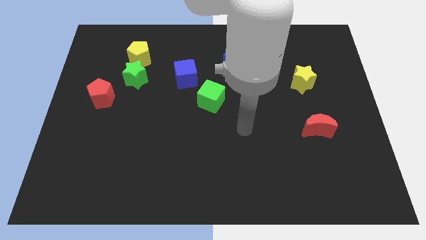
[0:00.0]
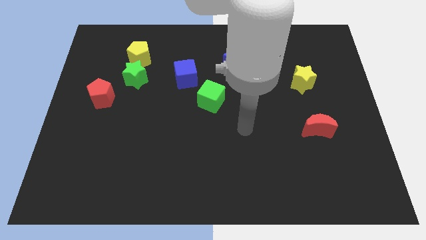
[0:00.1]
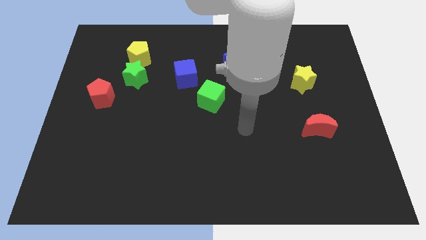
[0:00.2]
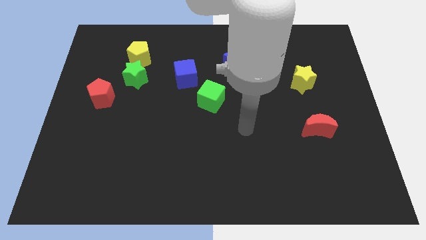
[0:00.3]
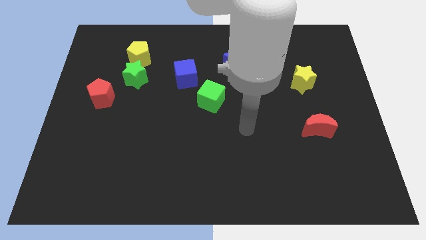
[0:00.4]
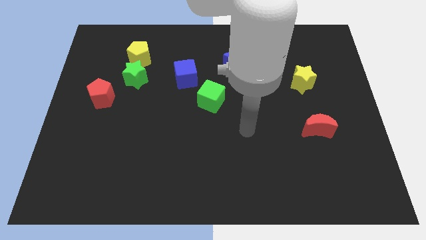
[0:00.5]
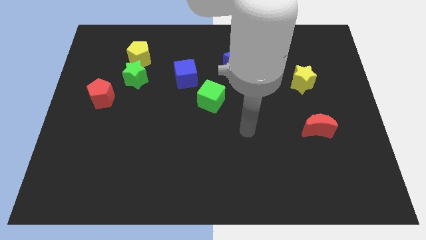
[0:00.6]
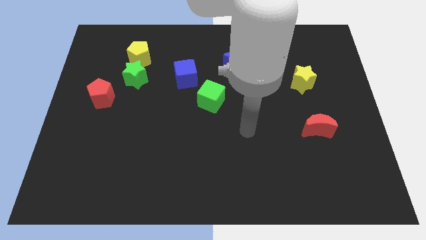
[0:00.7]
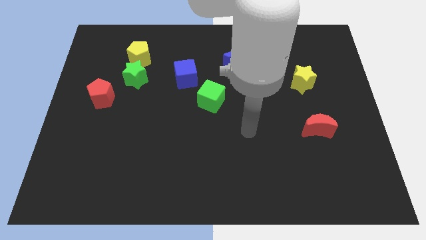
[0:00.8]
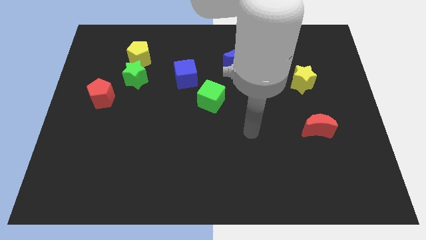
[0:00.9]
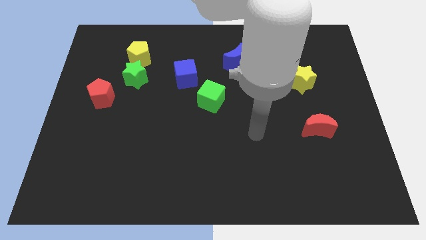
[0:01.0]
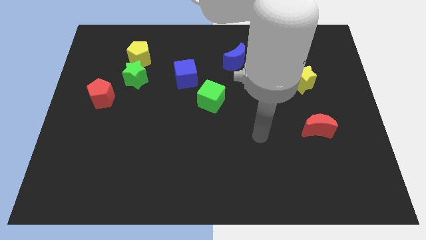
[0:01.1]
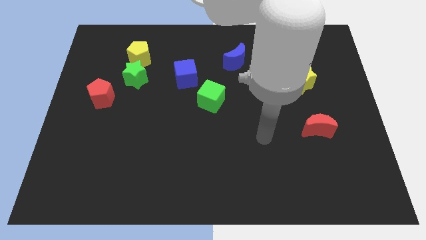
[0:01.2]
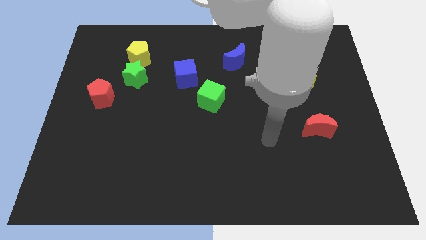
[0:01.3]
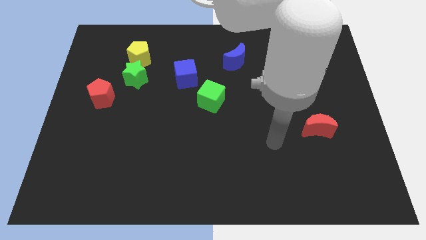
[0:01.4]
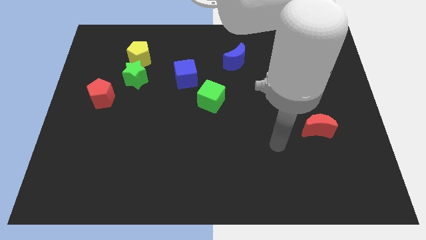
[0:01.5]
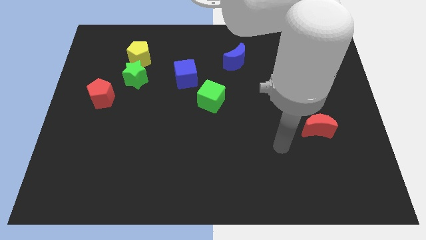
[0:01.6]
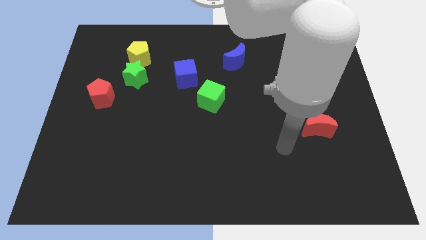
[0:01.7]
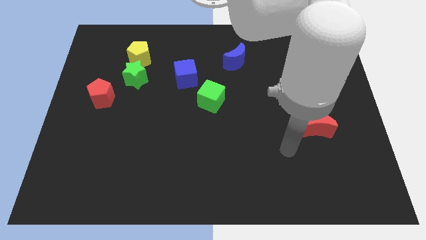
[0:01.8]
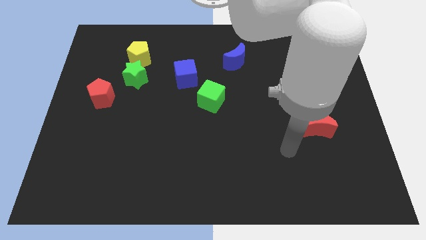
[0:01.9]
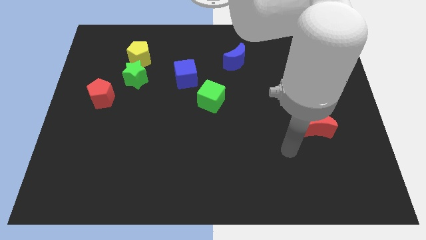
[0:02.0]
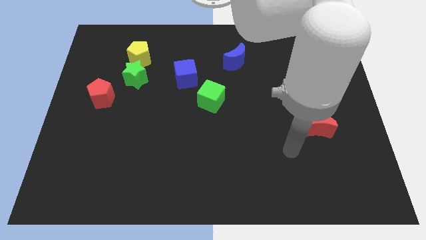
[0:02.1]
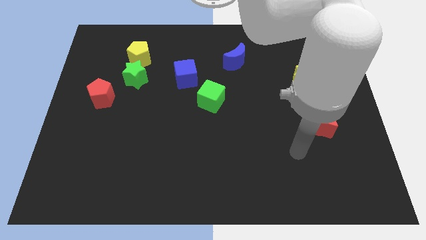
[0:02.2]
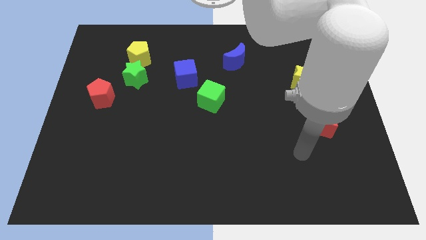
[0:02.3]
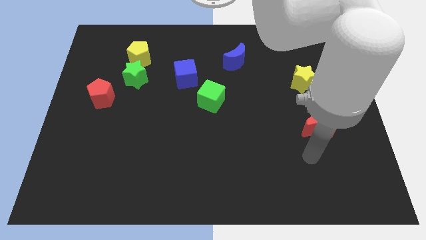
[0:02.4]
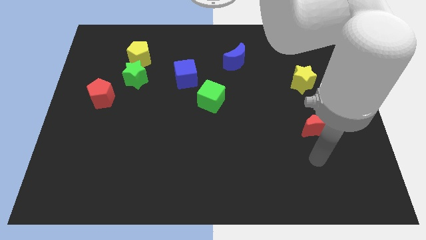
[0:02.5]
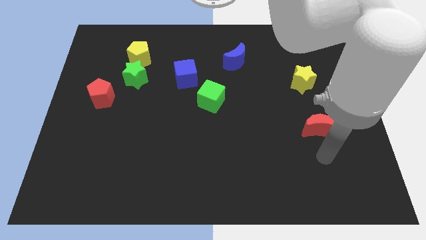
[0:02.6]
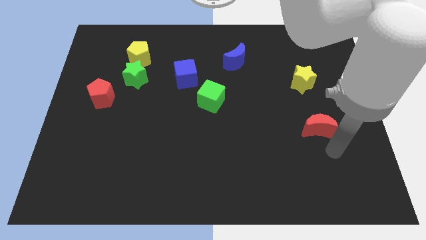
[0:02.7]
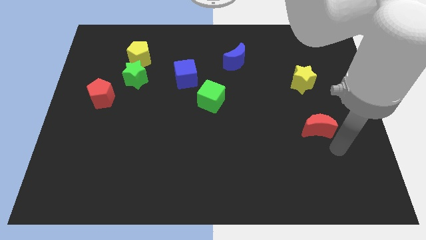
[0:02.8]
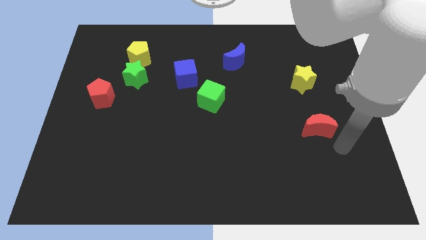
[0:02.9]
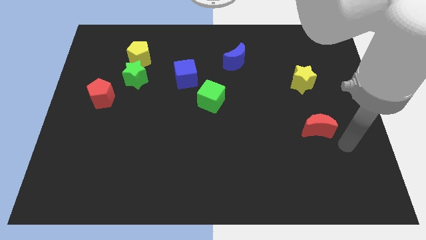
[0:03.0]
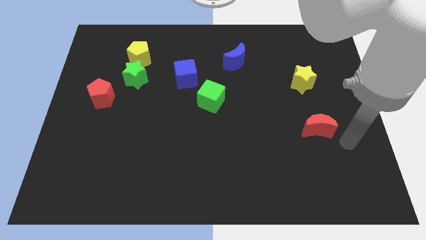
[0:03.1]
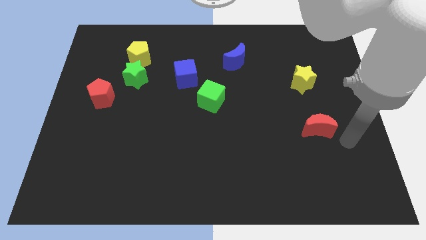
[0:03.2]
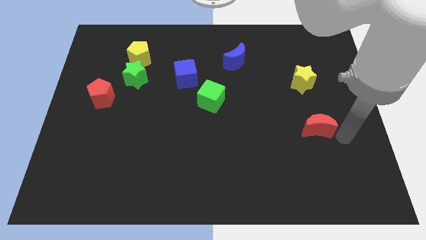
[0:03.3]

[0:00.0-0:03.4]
move the arm to the right of red crescent

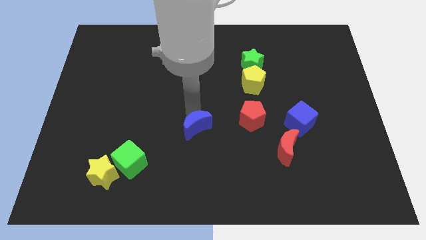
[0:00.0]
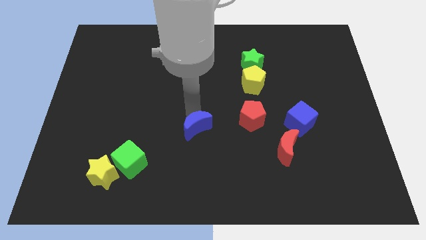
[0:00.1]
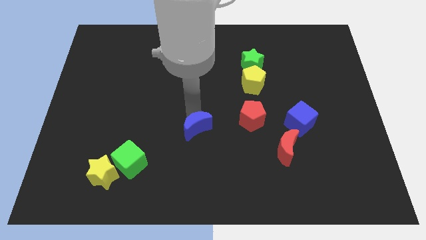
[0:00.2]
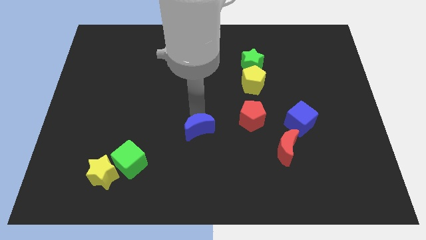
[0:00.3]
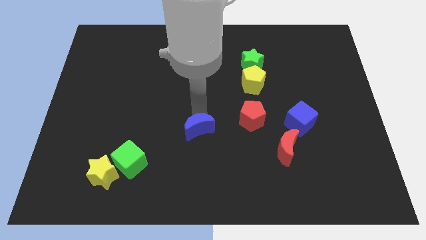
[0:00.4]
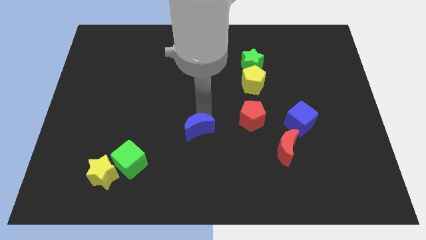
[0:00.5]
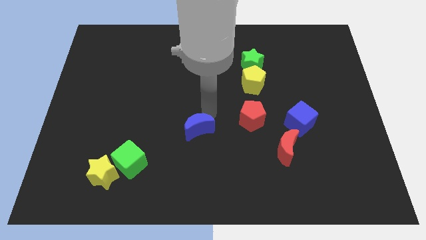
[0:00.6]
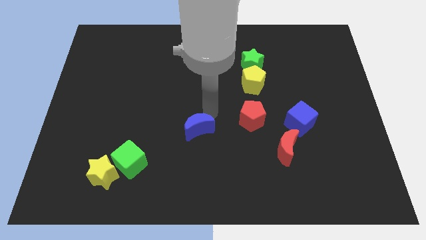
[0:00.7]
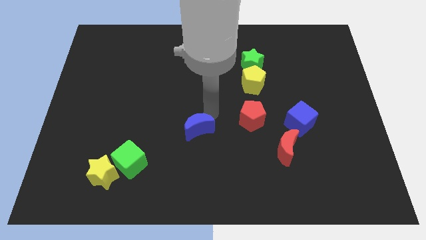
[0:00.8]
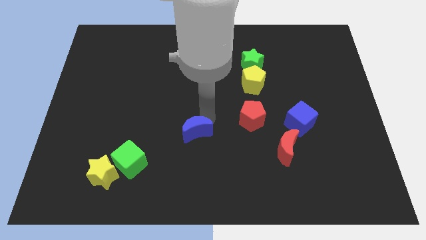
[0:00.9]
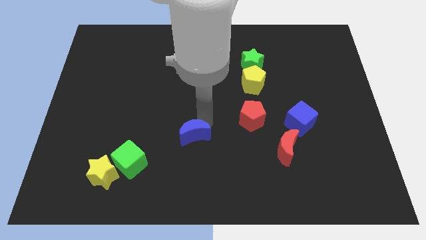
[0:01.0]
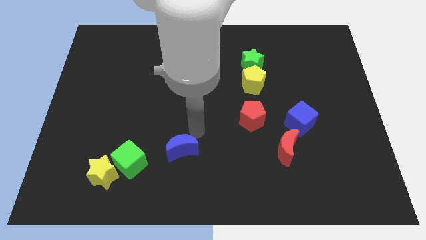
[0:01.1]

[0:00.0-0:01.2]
move the blue semicircle towards the green cube

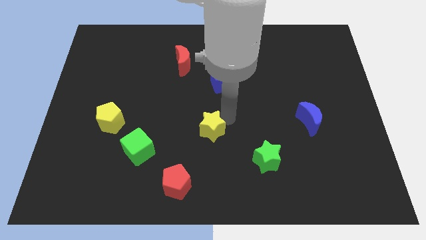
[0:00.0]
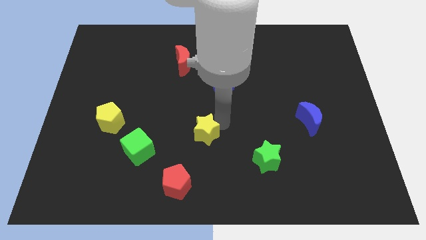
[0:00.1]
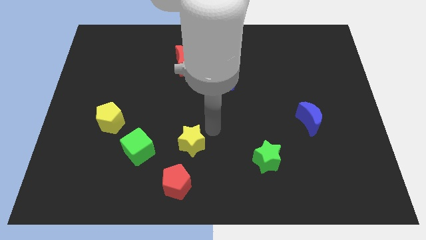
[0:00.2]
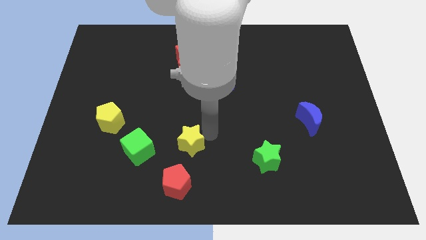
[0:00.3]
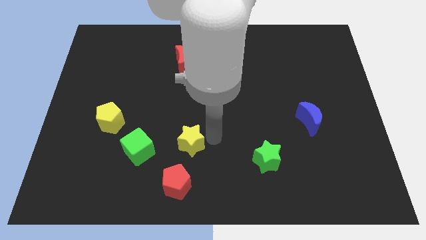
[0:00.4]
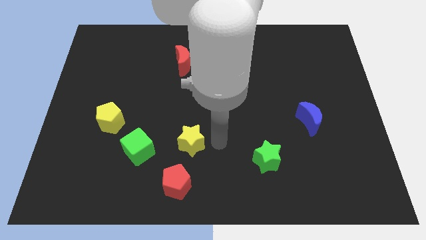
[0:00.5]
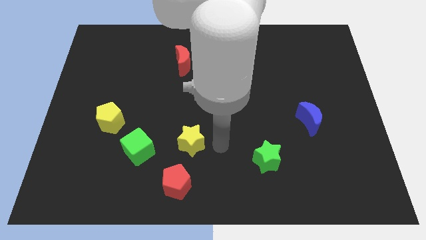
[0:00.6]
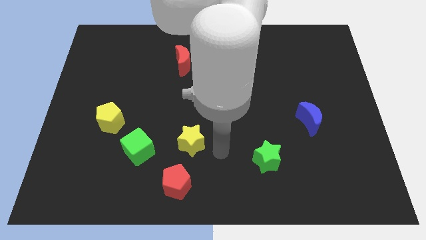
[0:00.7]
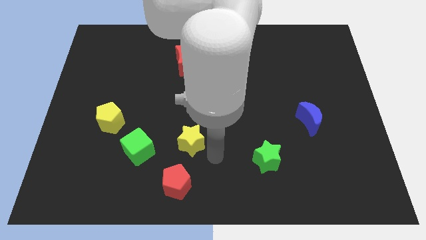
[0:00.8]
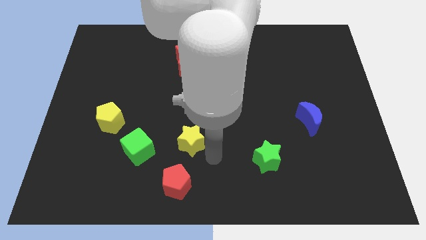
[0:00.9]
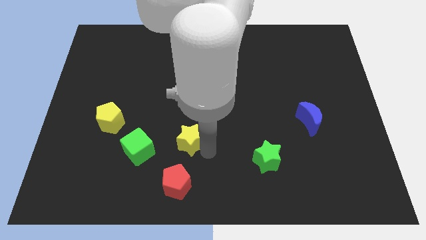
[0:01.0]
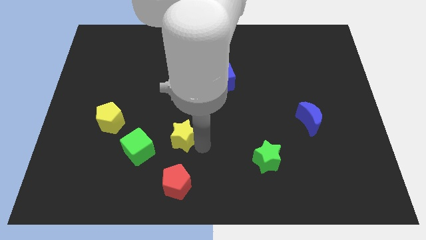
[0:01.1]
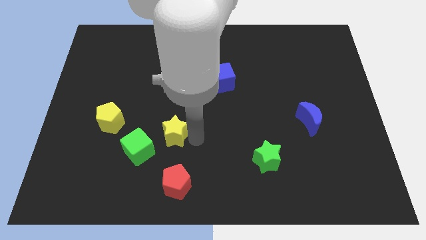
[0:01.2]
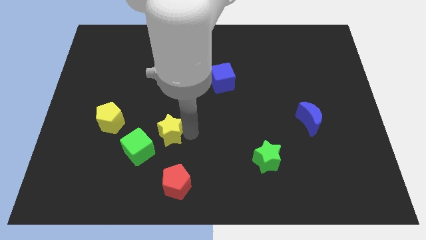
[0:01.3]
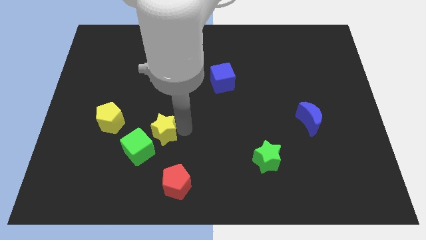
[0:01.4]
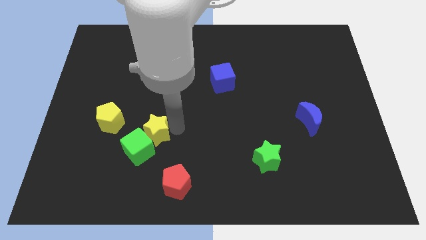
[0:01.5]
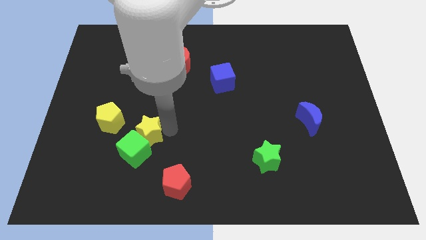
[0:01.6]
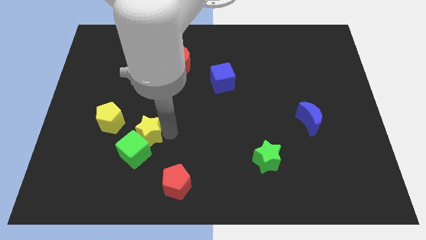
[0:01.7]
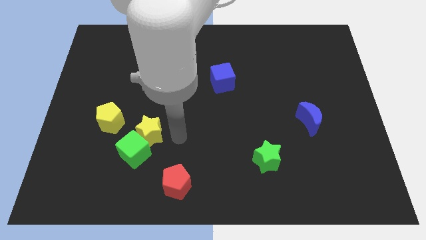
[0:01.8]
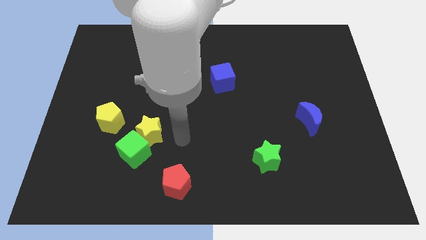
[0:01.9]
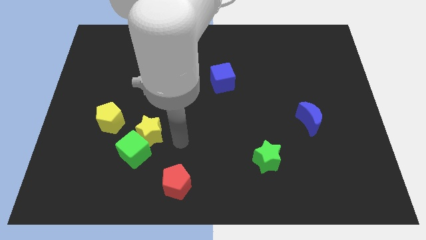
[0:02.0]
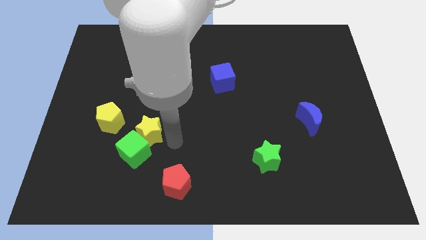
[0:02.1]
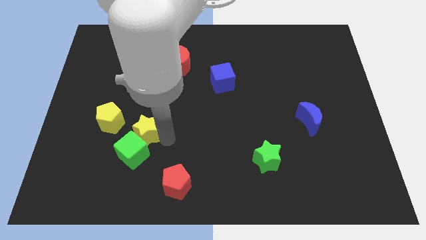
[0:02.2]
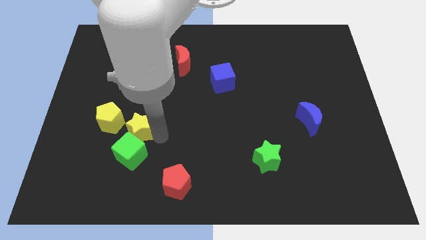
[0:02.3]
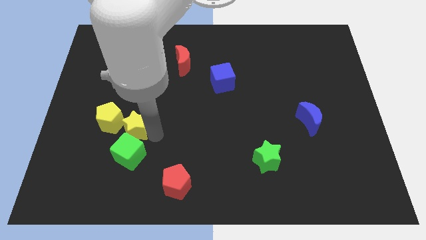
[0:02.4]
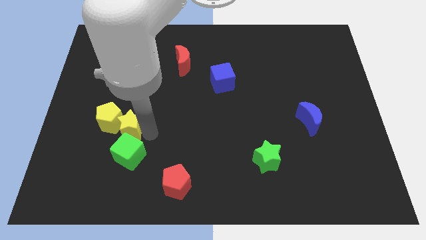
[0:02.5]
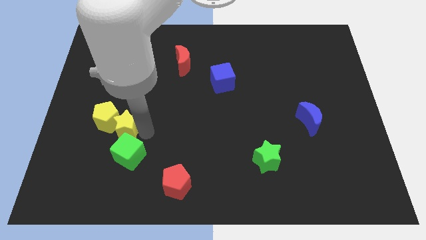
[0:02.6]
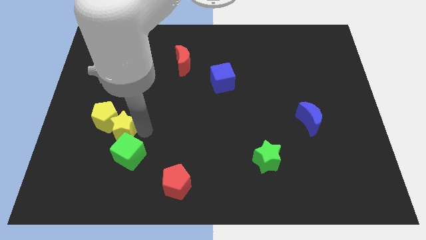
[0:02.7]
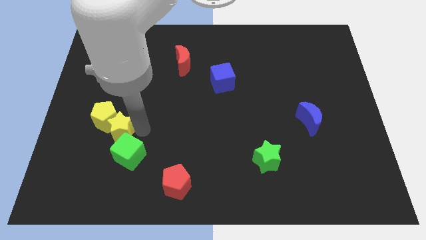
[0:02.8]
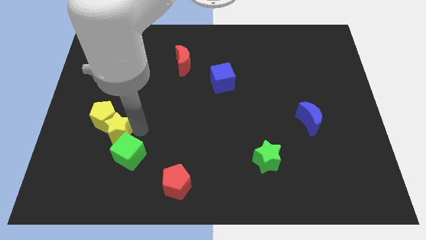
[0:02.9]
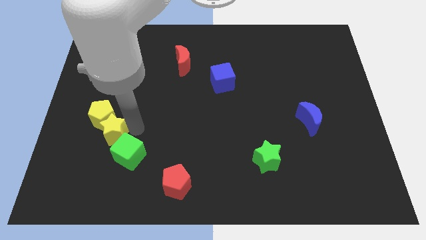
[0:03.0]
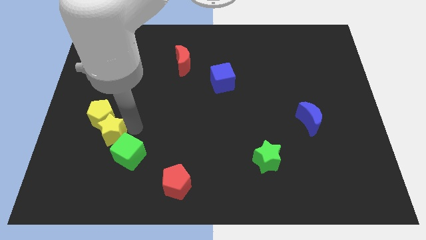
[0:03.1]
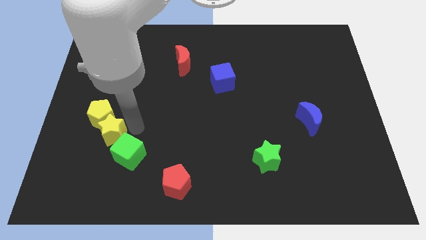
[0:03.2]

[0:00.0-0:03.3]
place the yellow star in between the yellow and green block

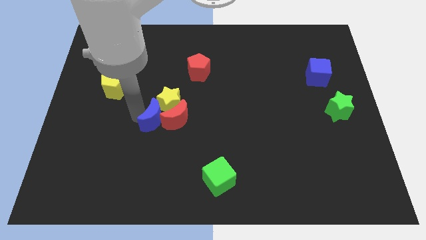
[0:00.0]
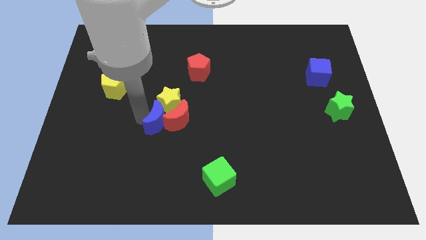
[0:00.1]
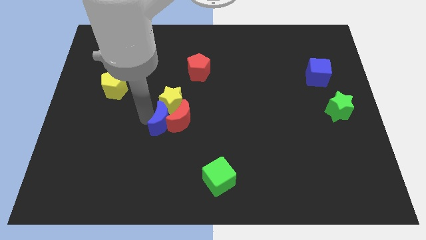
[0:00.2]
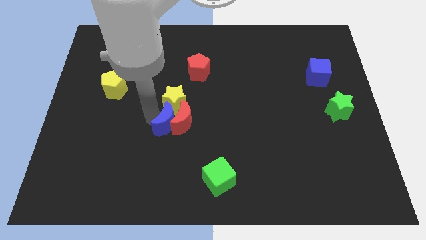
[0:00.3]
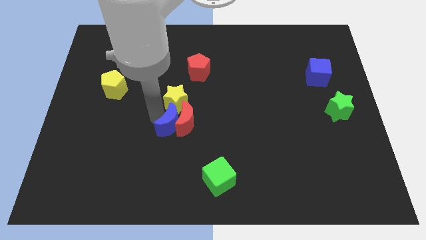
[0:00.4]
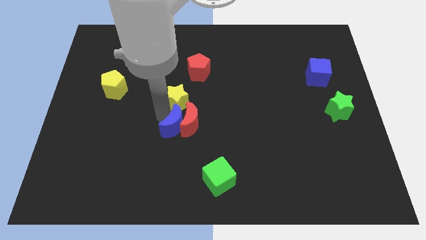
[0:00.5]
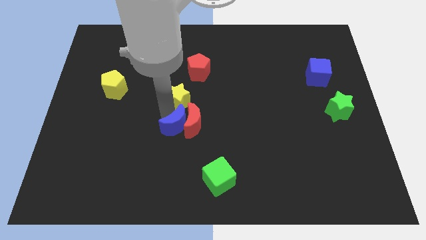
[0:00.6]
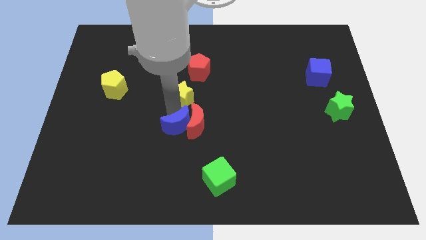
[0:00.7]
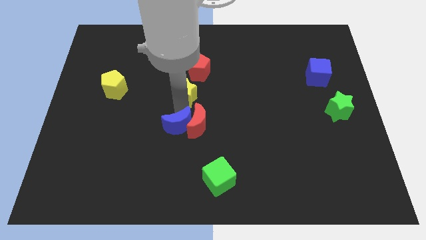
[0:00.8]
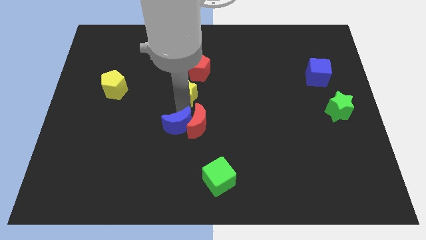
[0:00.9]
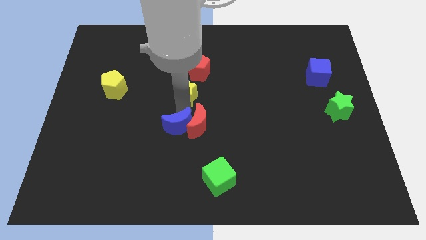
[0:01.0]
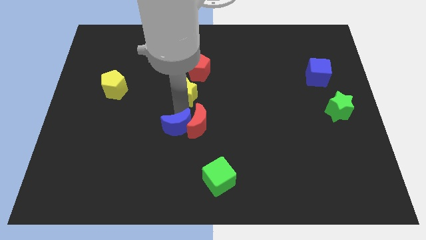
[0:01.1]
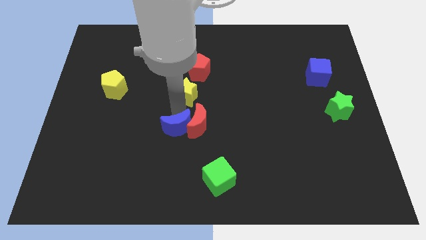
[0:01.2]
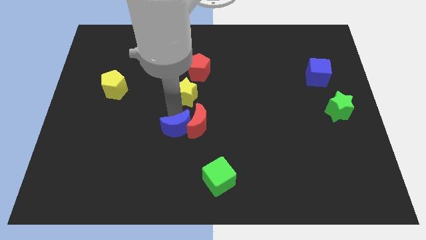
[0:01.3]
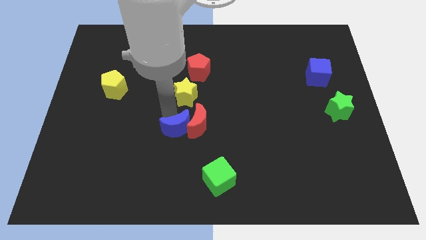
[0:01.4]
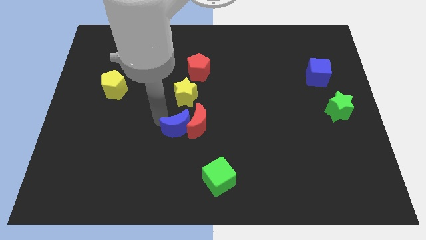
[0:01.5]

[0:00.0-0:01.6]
push the blue moon into red moon towards the center
